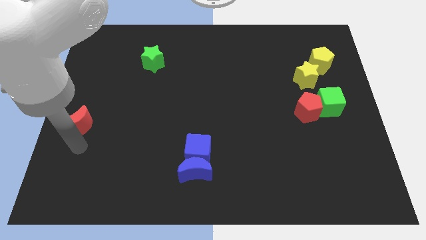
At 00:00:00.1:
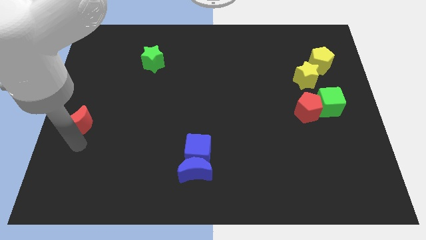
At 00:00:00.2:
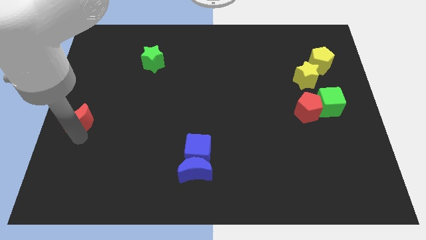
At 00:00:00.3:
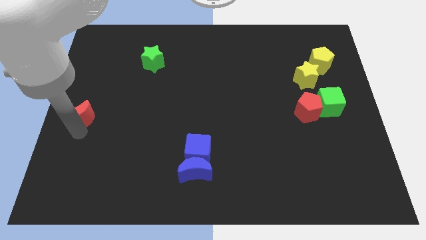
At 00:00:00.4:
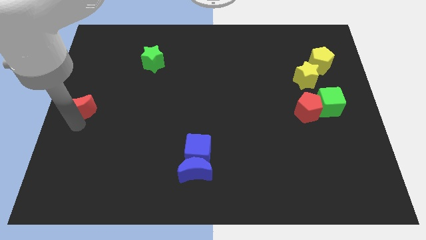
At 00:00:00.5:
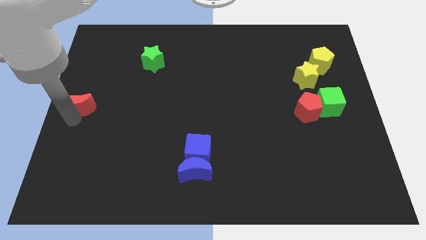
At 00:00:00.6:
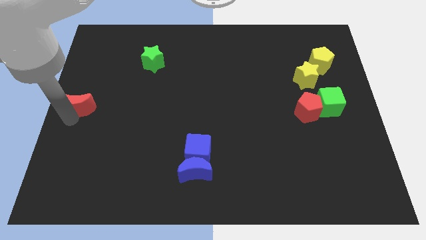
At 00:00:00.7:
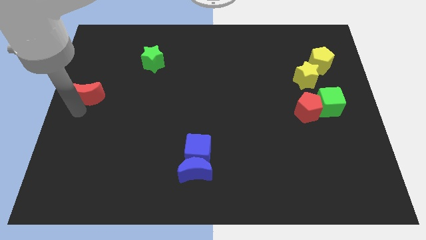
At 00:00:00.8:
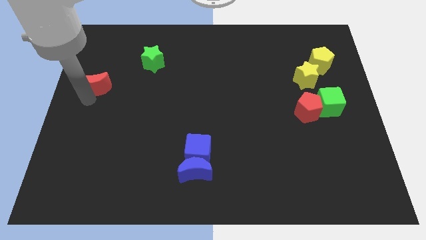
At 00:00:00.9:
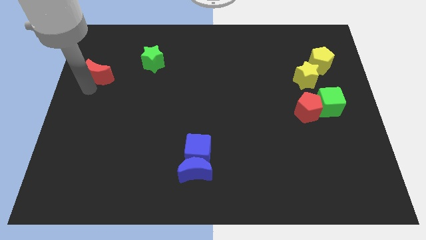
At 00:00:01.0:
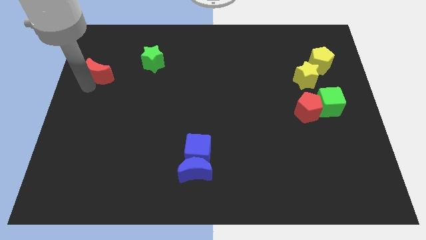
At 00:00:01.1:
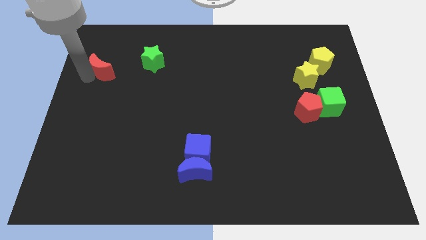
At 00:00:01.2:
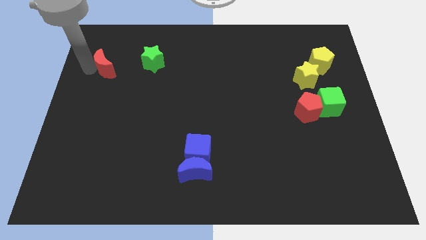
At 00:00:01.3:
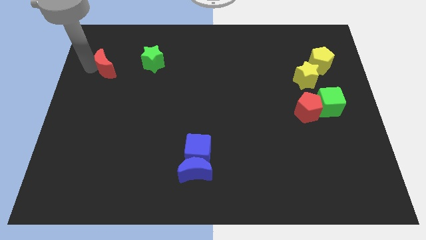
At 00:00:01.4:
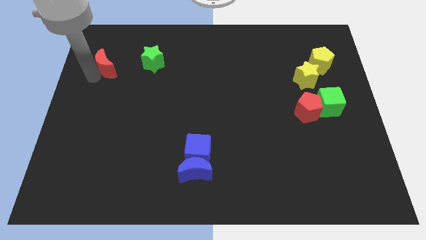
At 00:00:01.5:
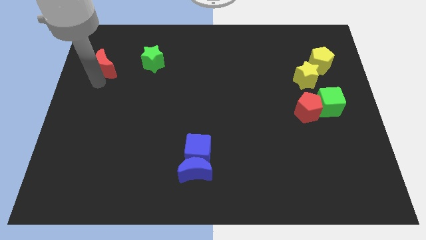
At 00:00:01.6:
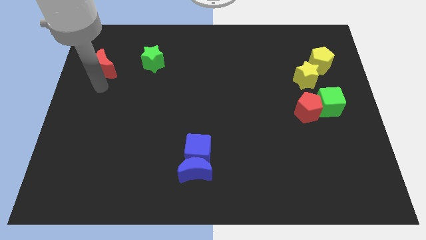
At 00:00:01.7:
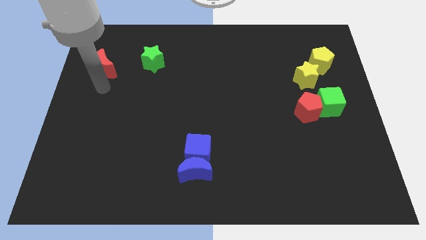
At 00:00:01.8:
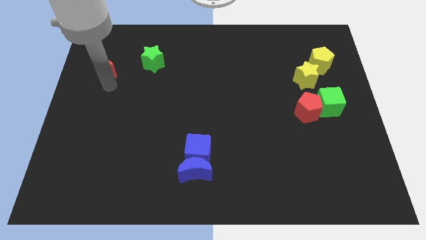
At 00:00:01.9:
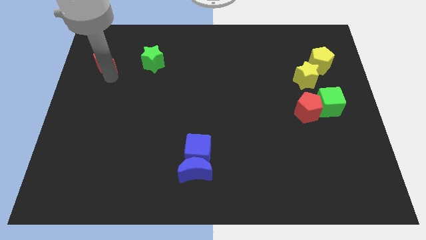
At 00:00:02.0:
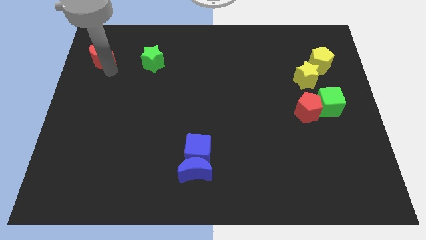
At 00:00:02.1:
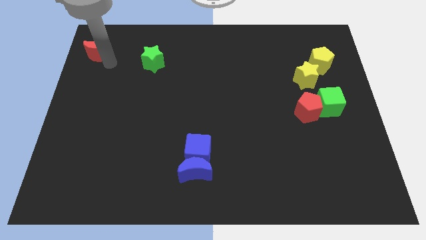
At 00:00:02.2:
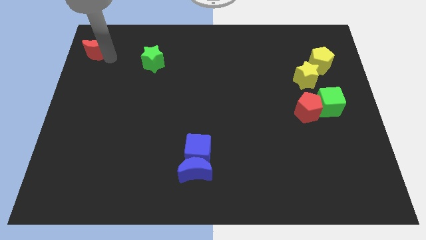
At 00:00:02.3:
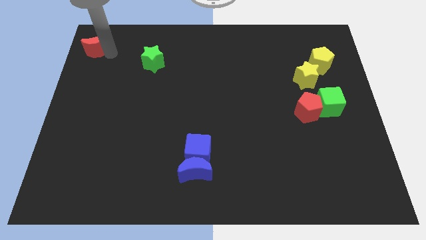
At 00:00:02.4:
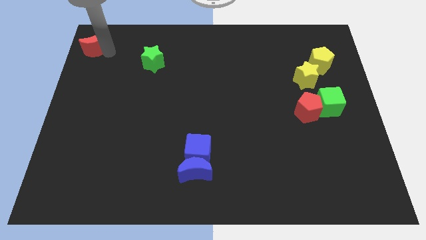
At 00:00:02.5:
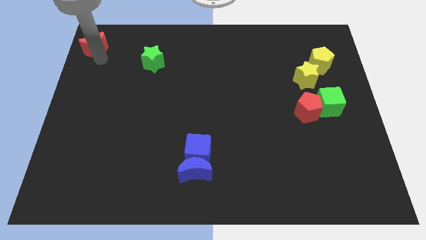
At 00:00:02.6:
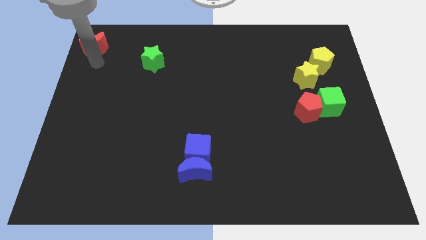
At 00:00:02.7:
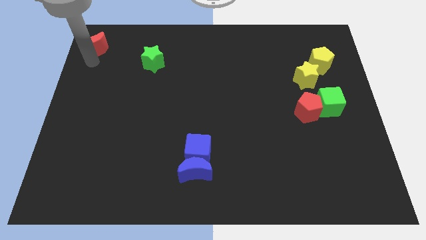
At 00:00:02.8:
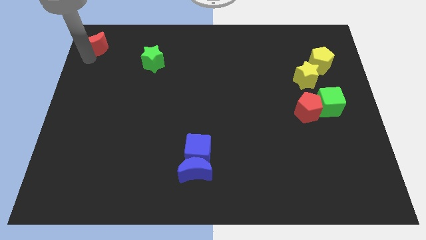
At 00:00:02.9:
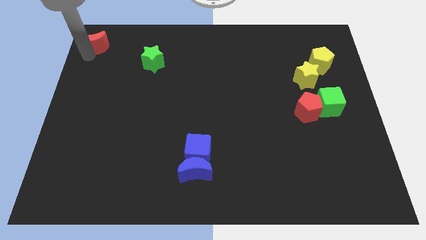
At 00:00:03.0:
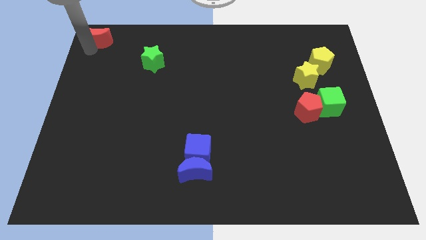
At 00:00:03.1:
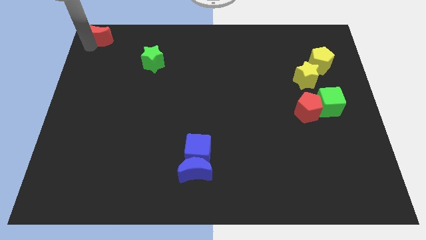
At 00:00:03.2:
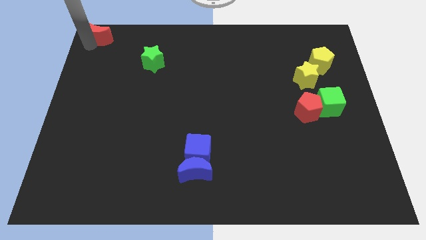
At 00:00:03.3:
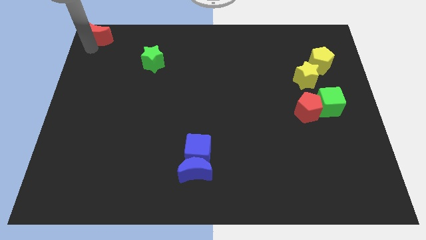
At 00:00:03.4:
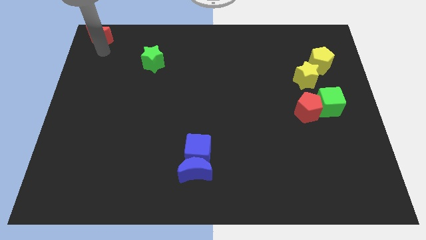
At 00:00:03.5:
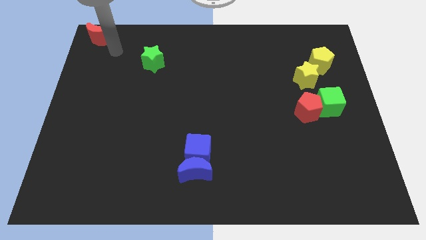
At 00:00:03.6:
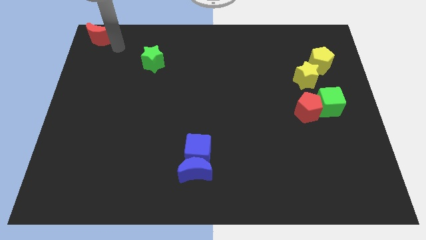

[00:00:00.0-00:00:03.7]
move red moon to the top left corner of the board

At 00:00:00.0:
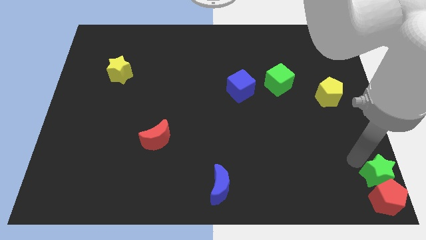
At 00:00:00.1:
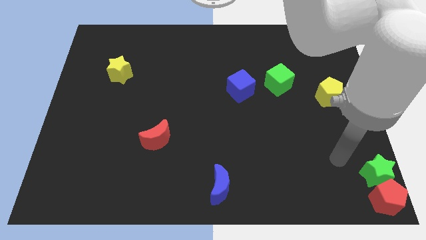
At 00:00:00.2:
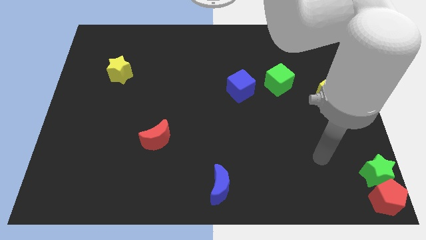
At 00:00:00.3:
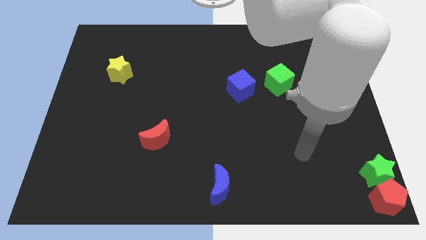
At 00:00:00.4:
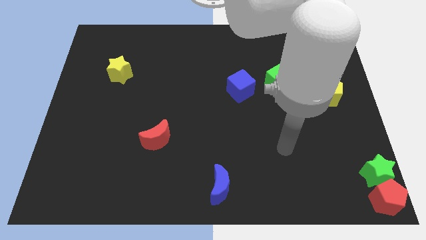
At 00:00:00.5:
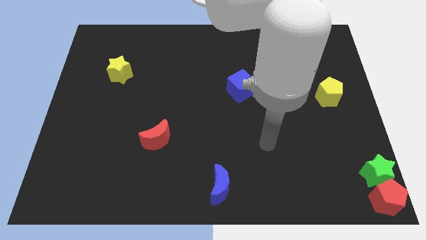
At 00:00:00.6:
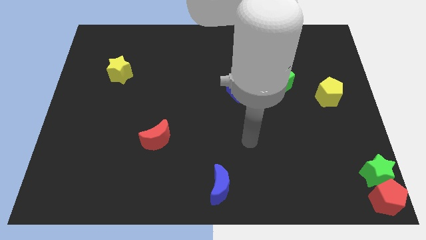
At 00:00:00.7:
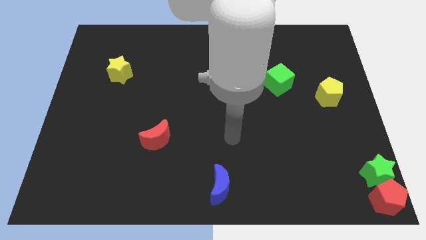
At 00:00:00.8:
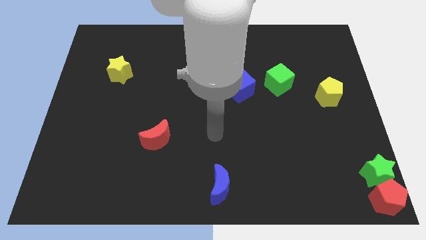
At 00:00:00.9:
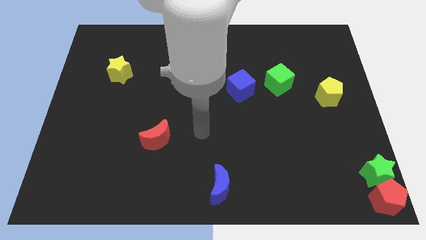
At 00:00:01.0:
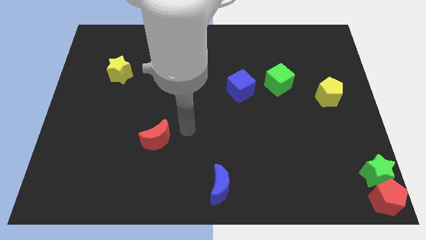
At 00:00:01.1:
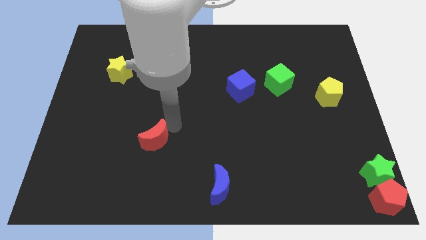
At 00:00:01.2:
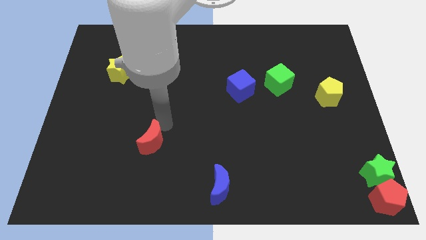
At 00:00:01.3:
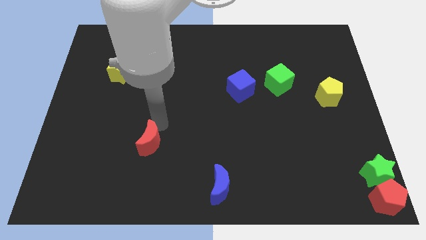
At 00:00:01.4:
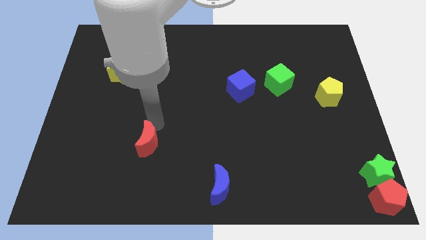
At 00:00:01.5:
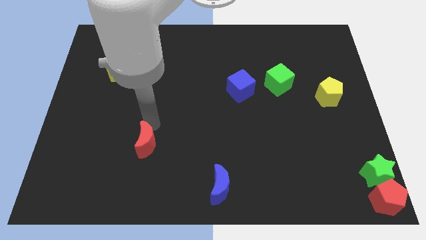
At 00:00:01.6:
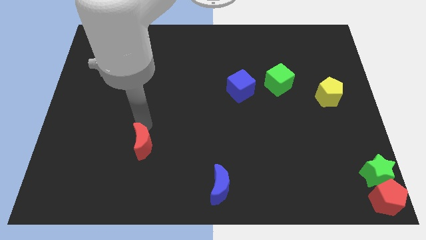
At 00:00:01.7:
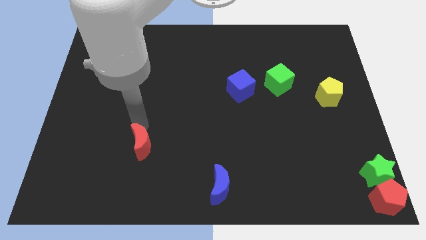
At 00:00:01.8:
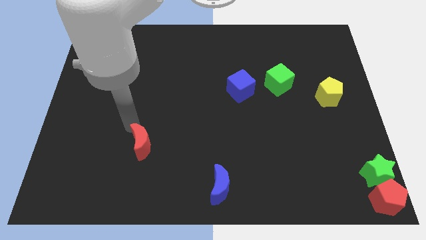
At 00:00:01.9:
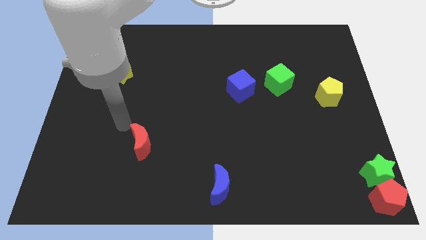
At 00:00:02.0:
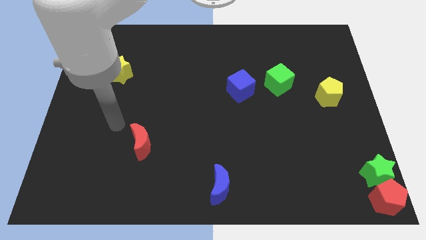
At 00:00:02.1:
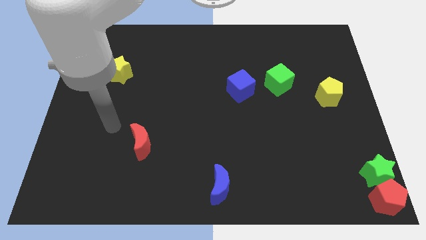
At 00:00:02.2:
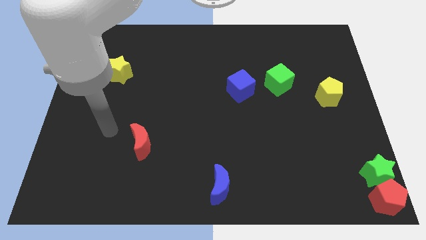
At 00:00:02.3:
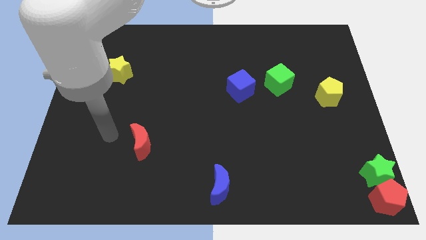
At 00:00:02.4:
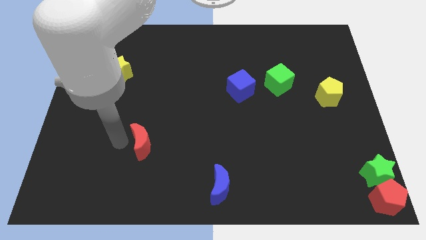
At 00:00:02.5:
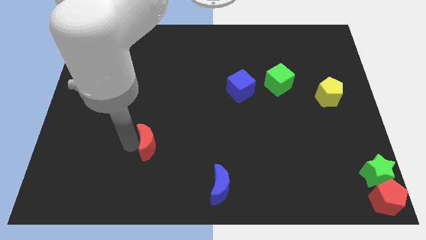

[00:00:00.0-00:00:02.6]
move your arm to the left of the red crescent

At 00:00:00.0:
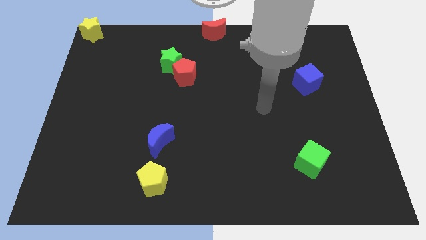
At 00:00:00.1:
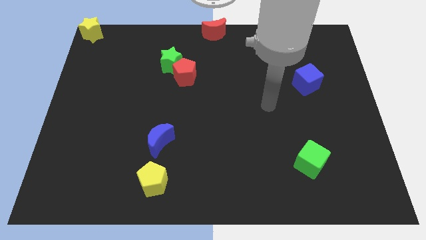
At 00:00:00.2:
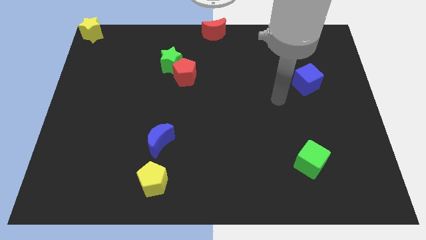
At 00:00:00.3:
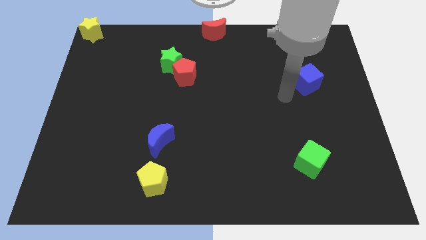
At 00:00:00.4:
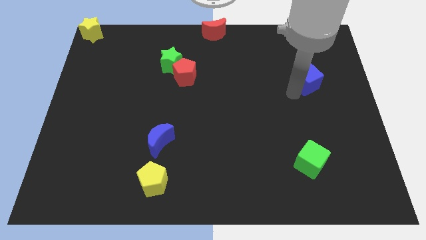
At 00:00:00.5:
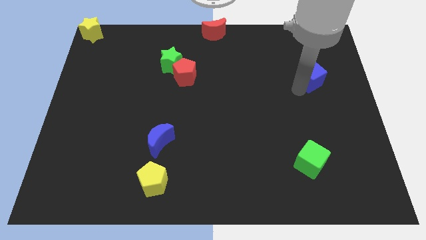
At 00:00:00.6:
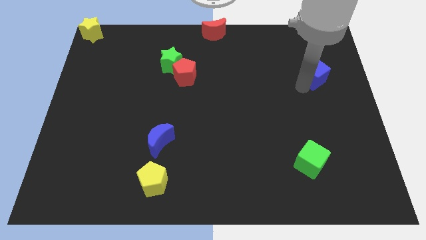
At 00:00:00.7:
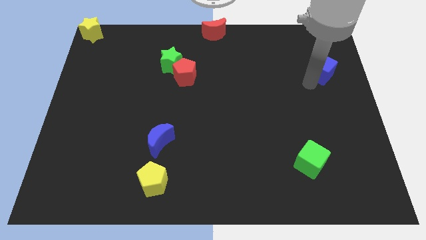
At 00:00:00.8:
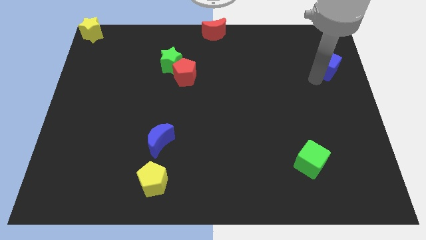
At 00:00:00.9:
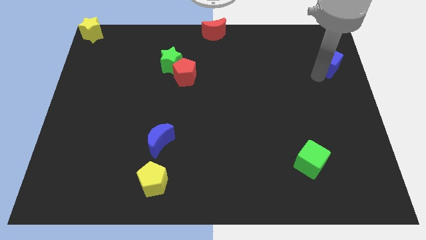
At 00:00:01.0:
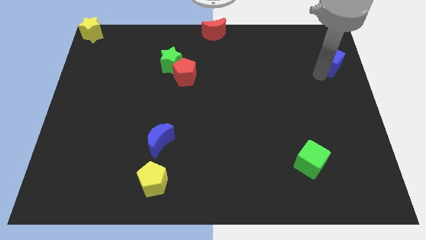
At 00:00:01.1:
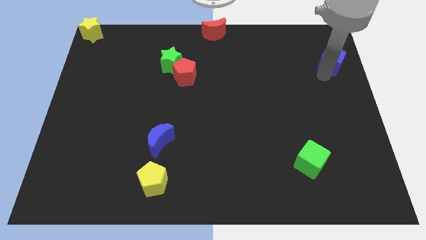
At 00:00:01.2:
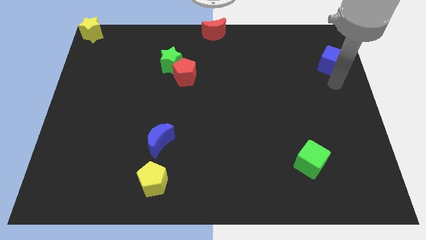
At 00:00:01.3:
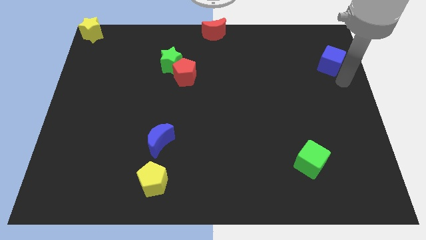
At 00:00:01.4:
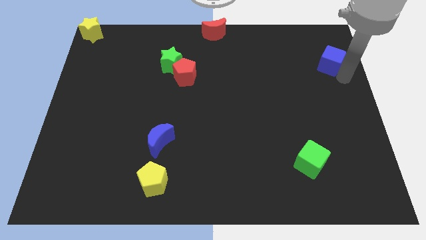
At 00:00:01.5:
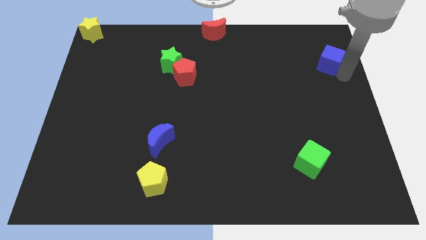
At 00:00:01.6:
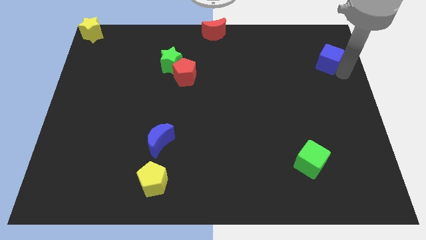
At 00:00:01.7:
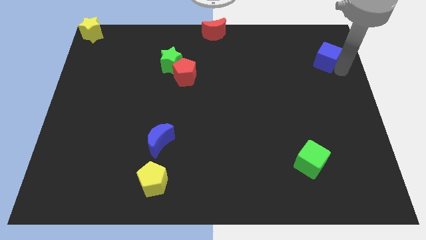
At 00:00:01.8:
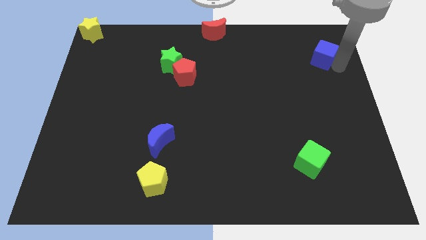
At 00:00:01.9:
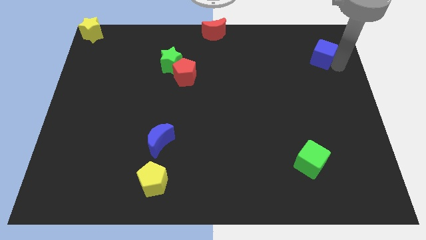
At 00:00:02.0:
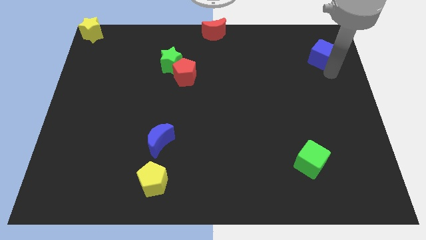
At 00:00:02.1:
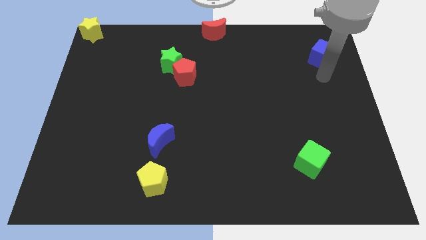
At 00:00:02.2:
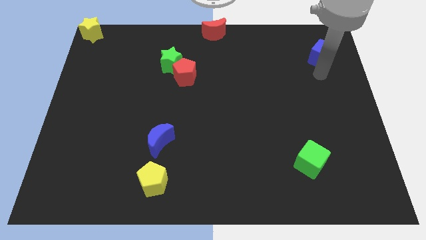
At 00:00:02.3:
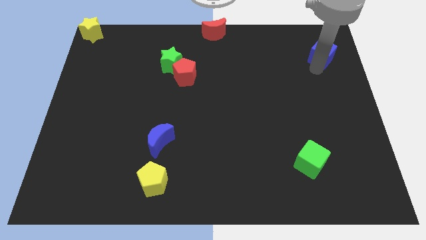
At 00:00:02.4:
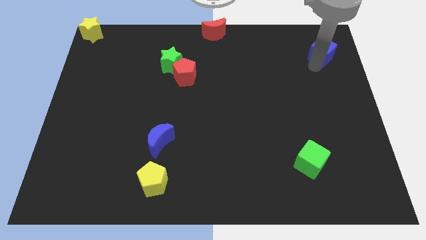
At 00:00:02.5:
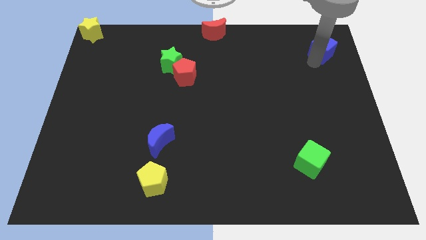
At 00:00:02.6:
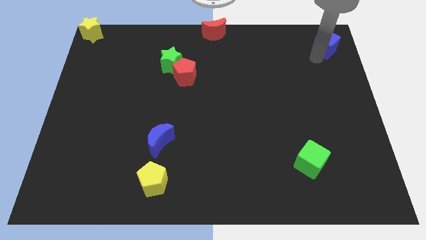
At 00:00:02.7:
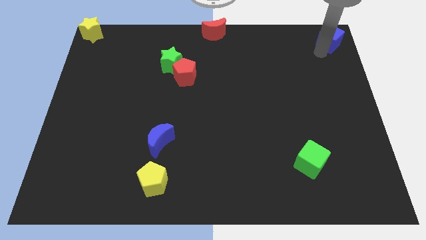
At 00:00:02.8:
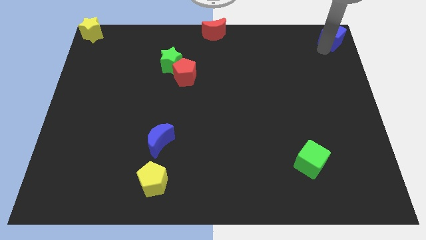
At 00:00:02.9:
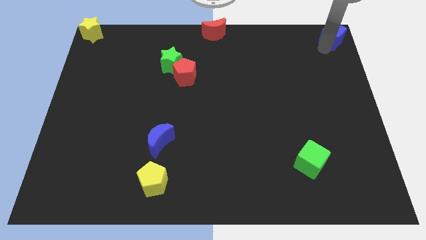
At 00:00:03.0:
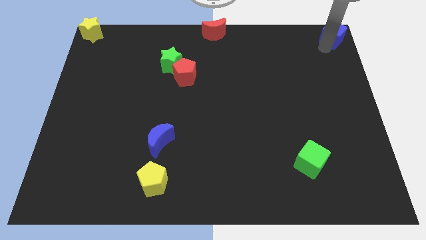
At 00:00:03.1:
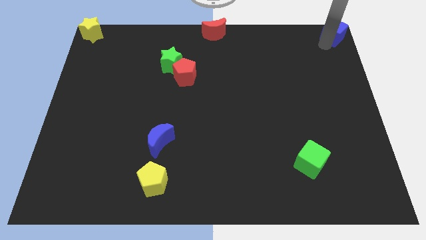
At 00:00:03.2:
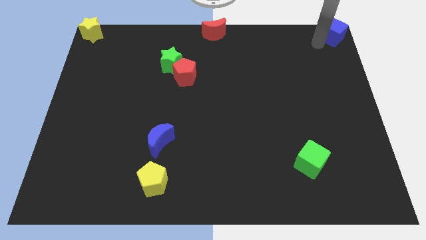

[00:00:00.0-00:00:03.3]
move the blue cube to the top right corner
